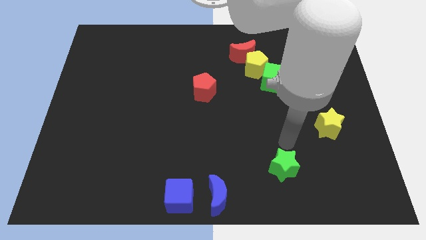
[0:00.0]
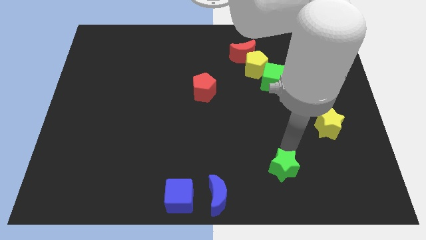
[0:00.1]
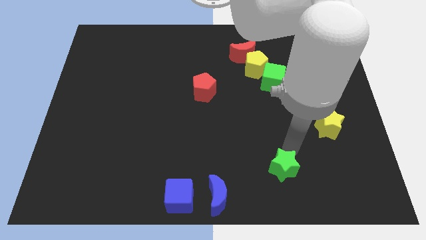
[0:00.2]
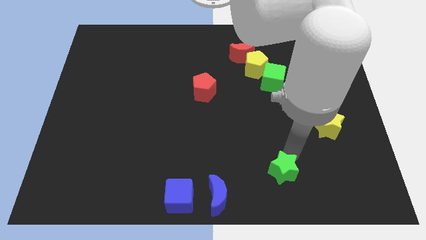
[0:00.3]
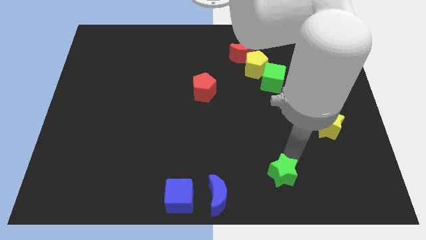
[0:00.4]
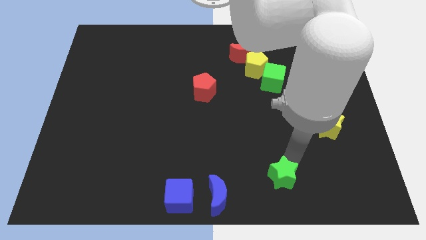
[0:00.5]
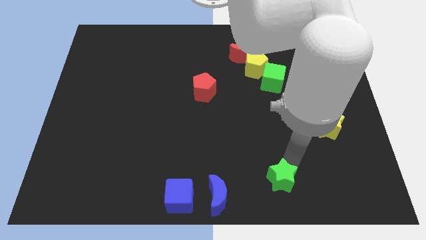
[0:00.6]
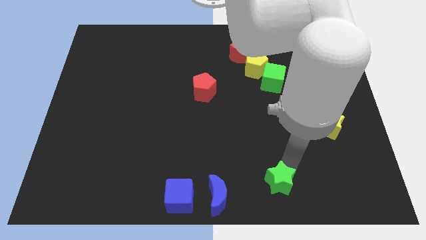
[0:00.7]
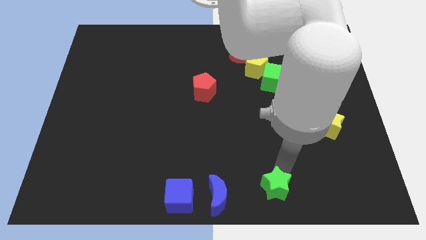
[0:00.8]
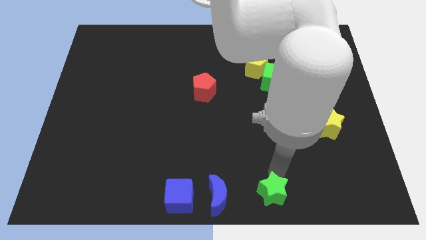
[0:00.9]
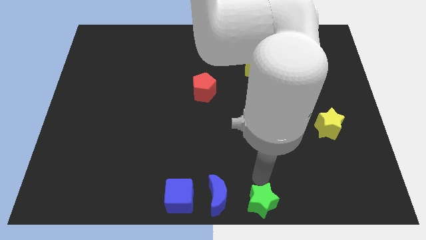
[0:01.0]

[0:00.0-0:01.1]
move green star at the bottom center

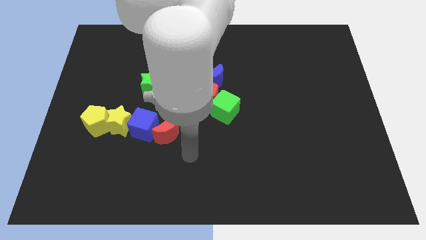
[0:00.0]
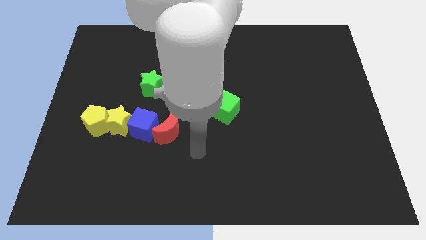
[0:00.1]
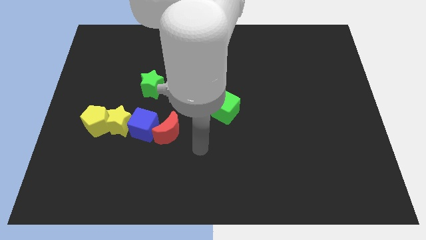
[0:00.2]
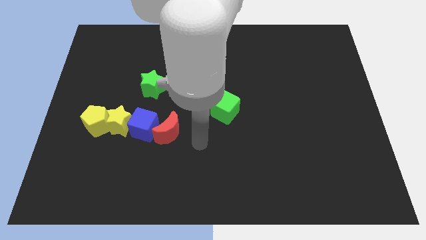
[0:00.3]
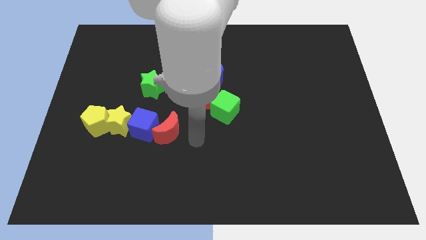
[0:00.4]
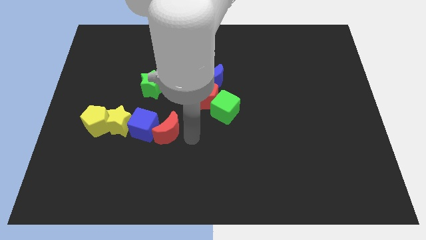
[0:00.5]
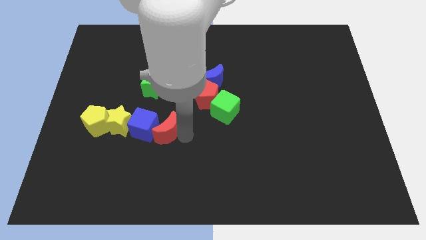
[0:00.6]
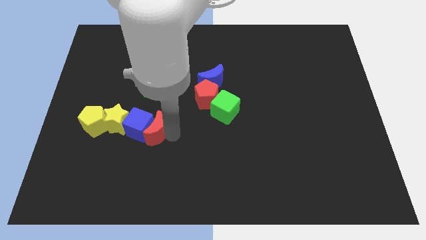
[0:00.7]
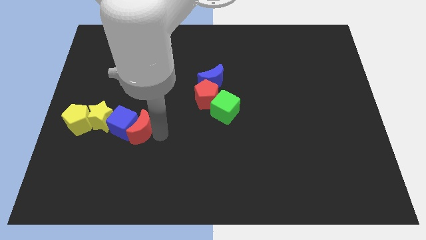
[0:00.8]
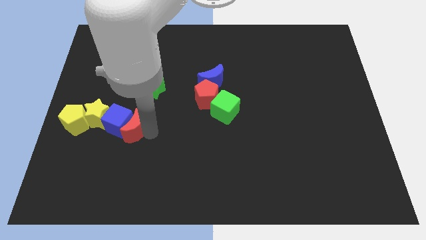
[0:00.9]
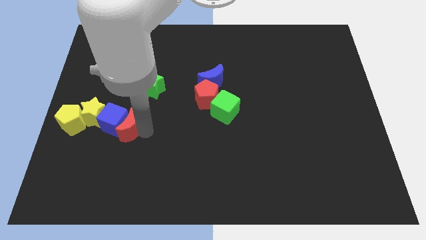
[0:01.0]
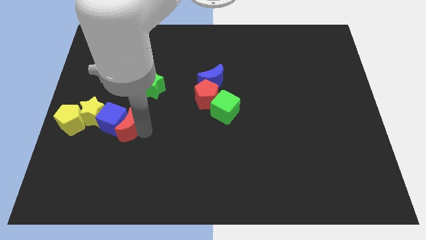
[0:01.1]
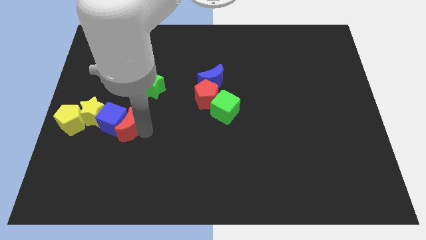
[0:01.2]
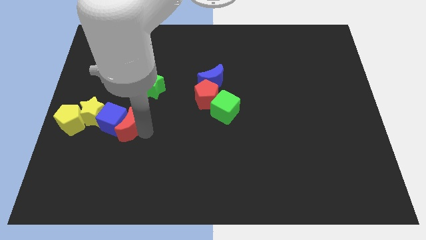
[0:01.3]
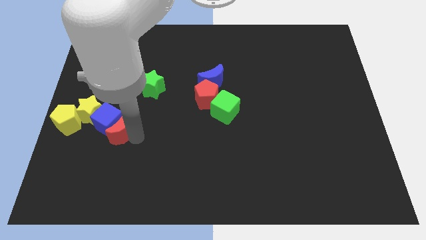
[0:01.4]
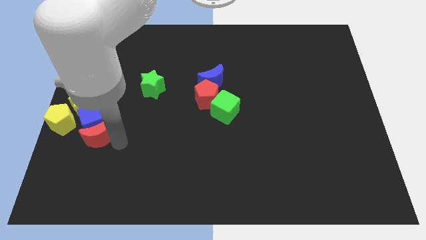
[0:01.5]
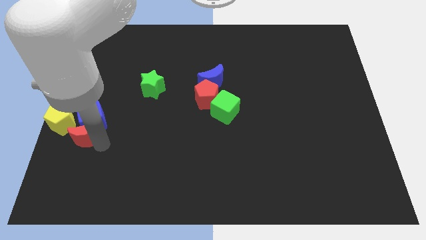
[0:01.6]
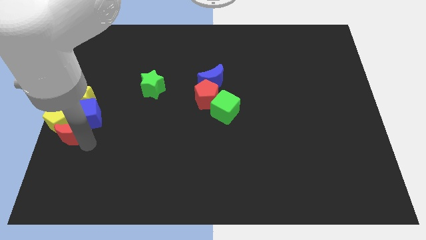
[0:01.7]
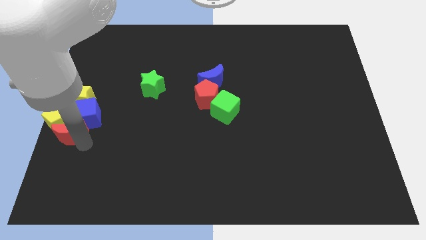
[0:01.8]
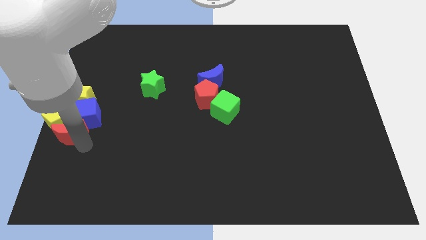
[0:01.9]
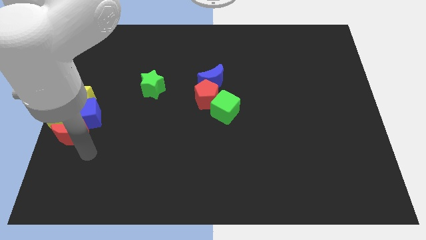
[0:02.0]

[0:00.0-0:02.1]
arrange the yellow blocks red moon blue cube at the center left of the board

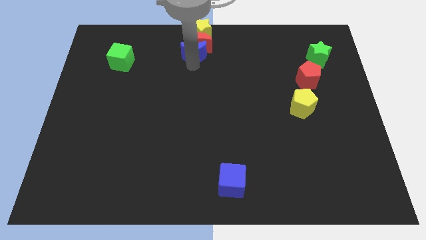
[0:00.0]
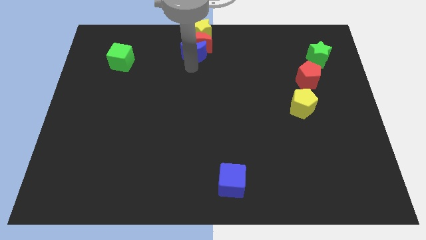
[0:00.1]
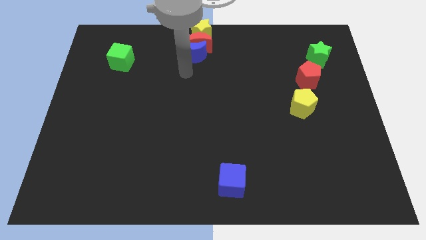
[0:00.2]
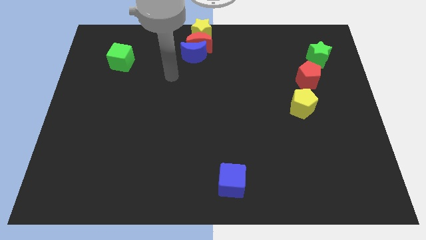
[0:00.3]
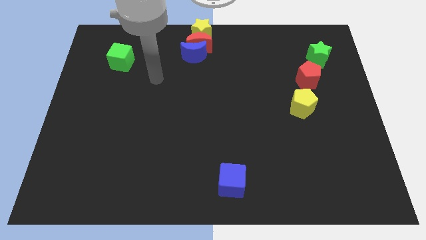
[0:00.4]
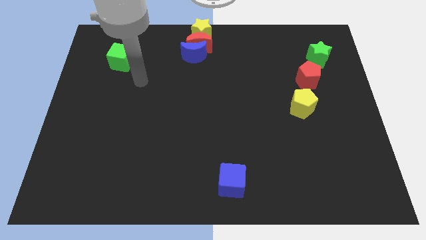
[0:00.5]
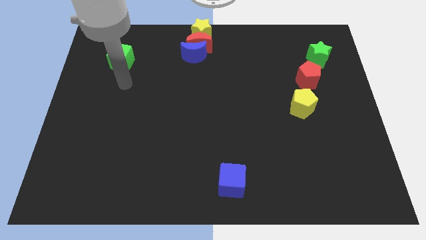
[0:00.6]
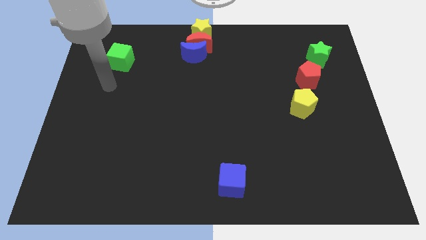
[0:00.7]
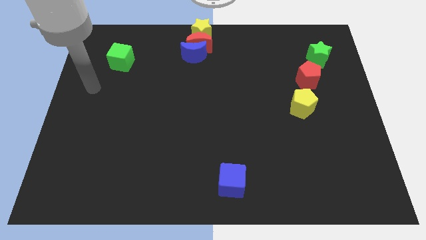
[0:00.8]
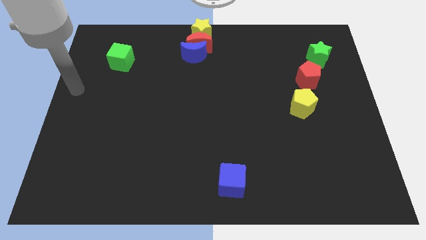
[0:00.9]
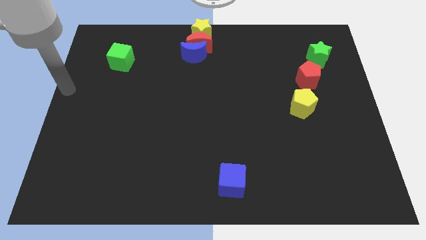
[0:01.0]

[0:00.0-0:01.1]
move your hand to the bottom left of the green star

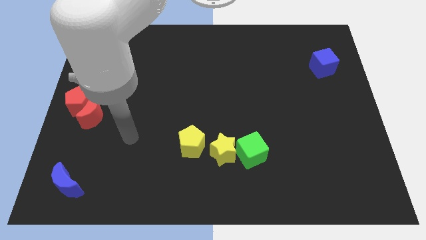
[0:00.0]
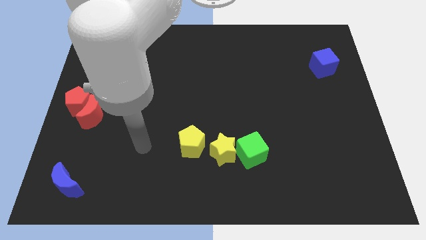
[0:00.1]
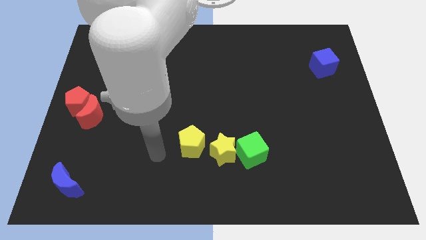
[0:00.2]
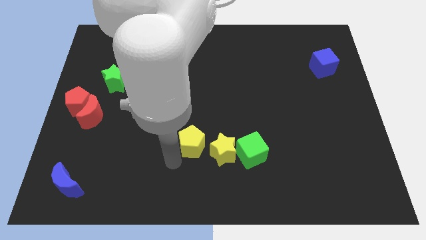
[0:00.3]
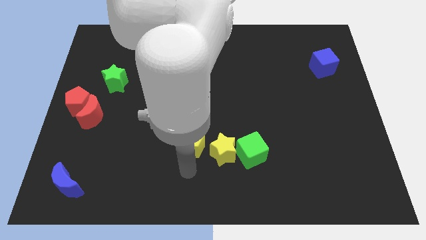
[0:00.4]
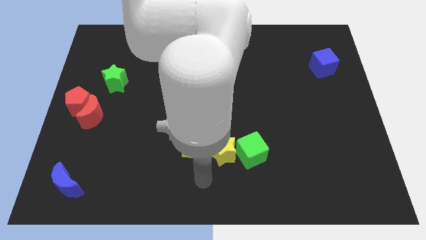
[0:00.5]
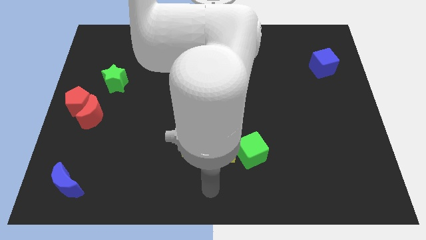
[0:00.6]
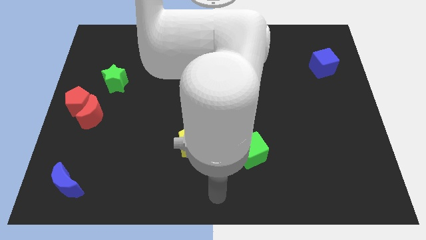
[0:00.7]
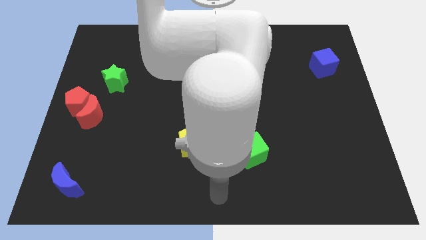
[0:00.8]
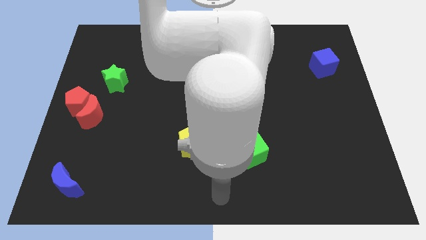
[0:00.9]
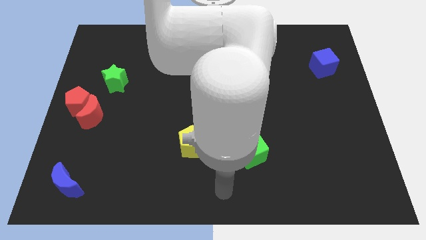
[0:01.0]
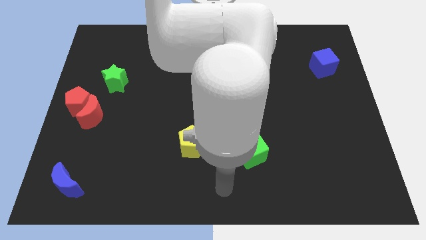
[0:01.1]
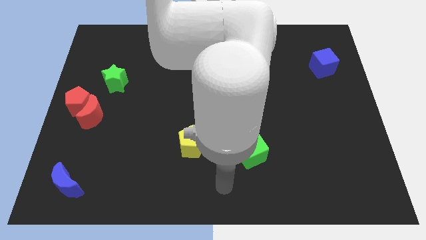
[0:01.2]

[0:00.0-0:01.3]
push arm in the bottom center

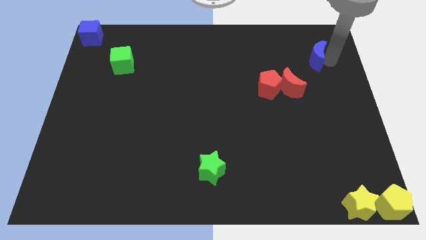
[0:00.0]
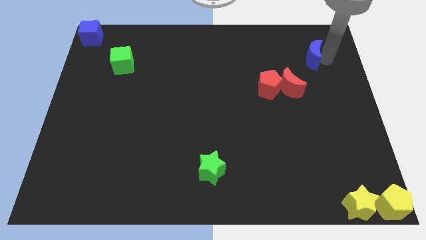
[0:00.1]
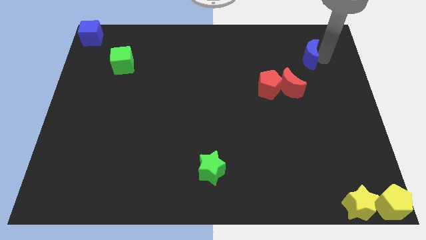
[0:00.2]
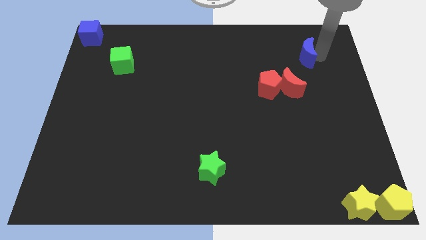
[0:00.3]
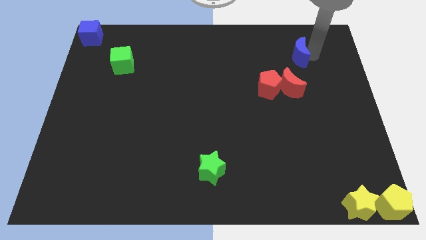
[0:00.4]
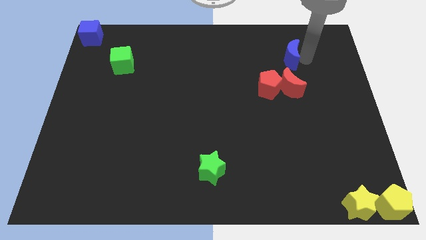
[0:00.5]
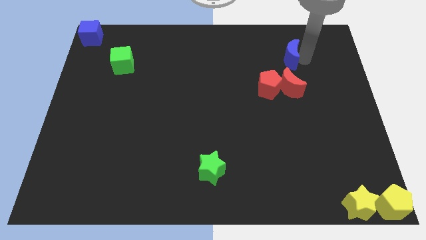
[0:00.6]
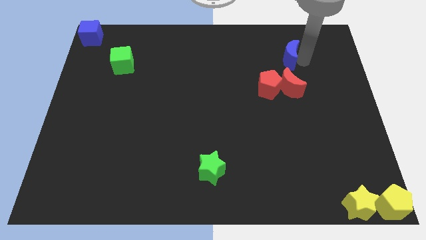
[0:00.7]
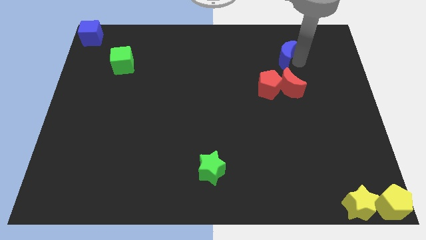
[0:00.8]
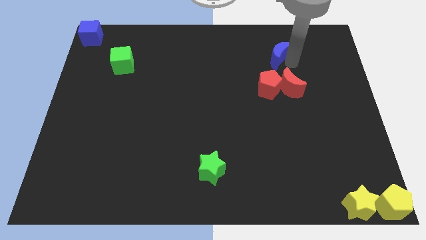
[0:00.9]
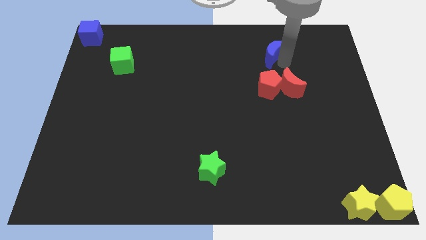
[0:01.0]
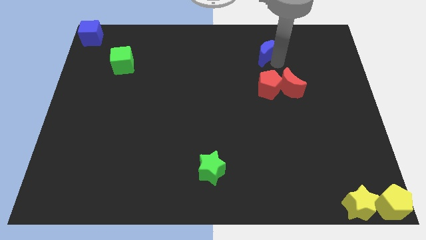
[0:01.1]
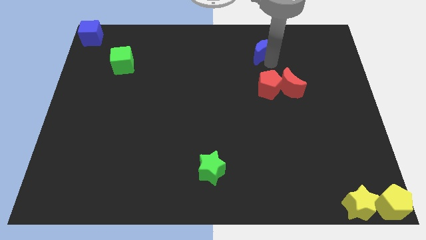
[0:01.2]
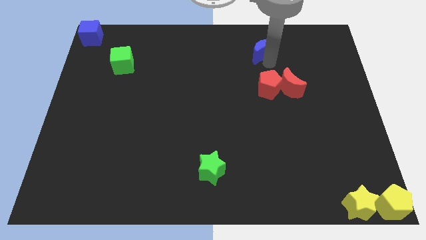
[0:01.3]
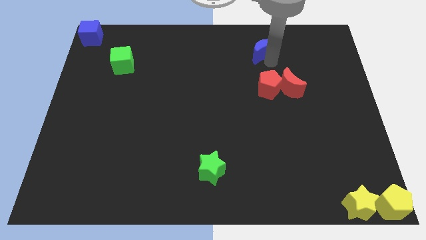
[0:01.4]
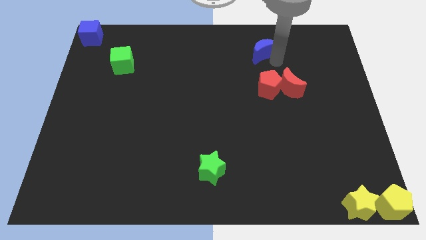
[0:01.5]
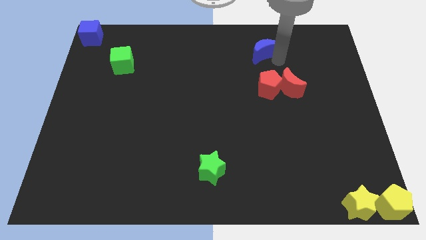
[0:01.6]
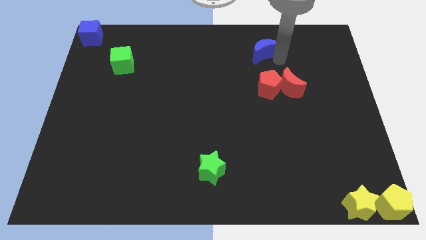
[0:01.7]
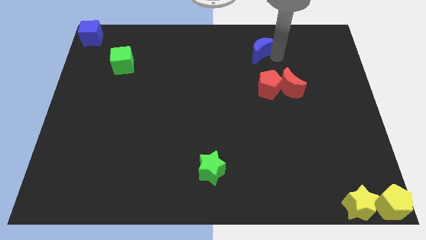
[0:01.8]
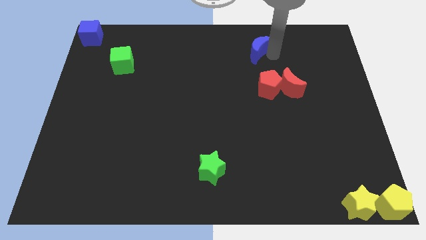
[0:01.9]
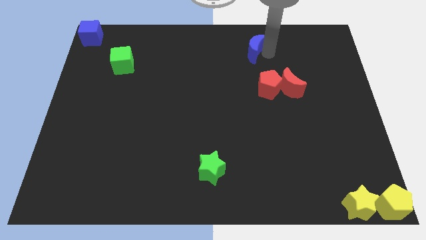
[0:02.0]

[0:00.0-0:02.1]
place the blue moon at the top of the red pentagon

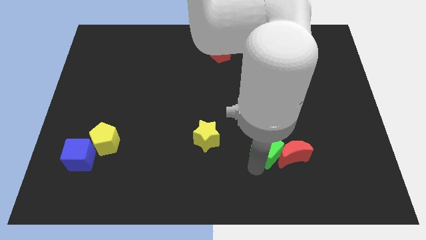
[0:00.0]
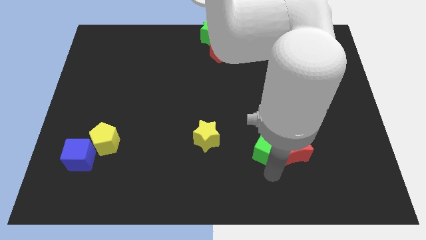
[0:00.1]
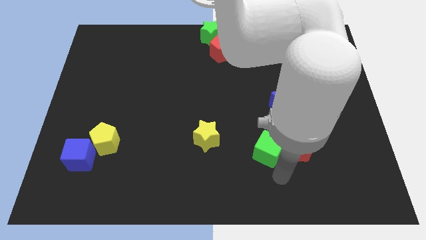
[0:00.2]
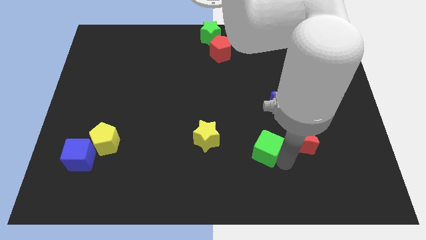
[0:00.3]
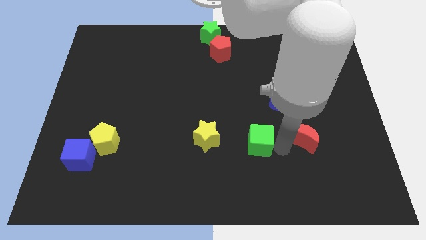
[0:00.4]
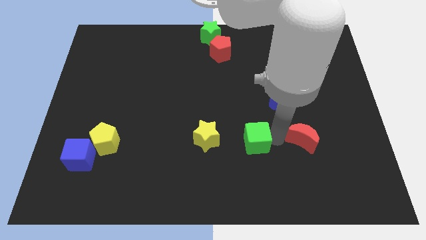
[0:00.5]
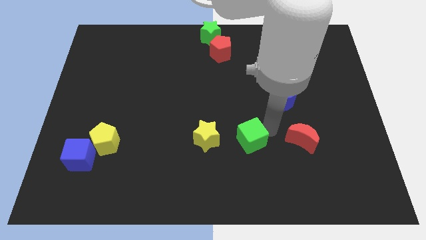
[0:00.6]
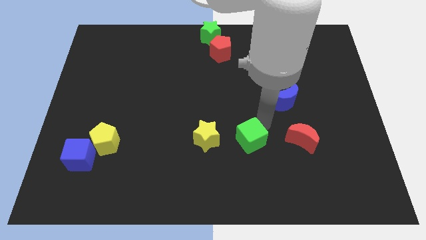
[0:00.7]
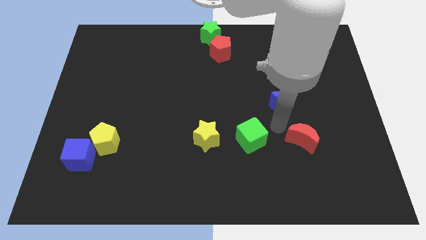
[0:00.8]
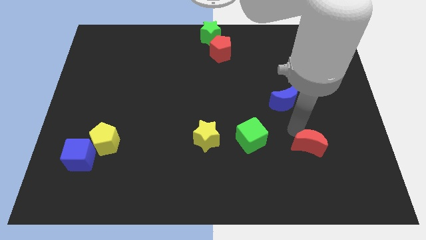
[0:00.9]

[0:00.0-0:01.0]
separate the green cube and the red crescent

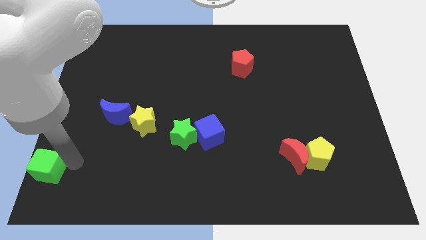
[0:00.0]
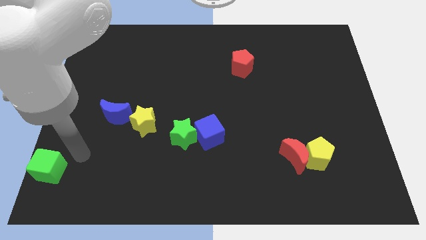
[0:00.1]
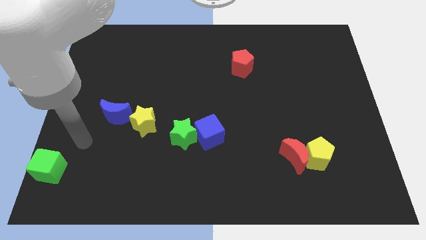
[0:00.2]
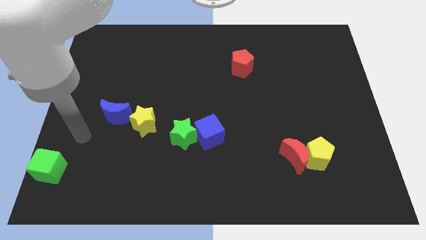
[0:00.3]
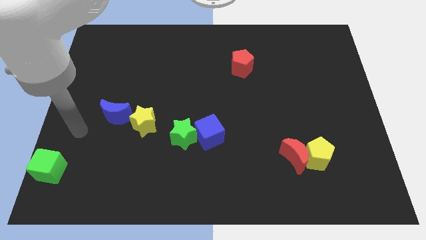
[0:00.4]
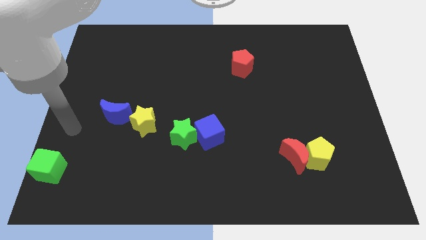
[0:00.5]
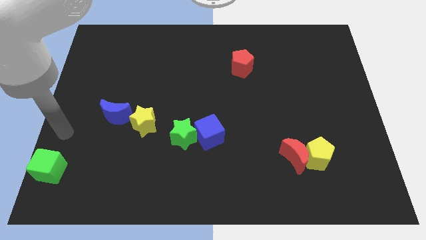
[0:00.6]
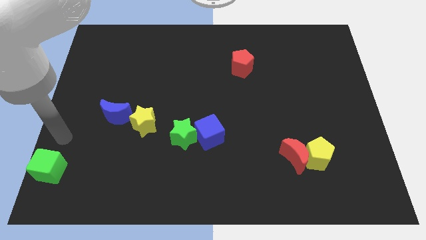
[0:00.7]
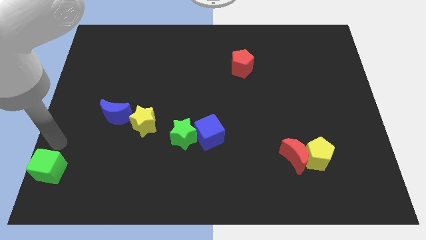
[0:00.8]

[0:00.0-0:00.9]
move your arm to the top of the green cube
